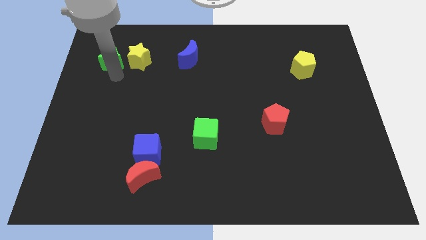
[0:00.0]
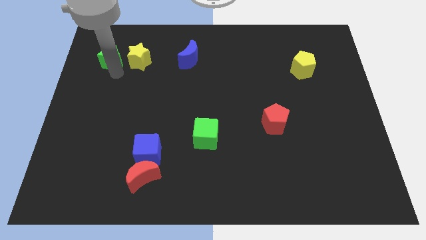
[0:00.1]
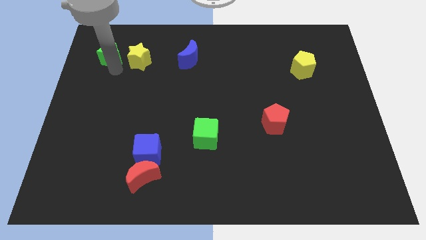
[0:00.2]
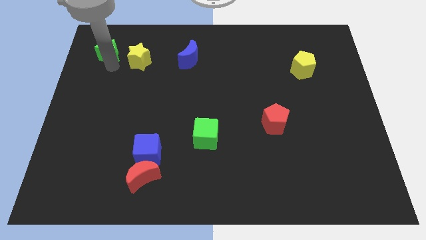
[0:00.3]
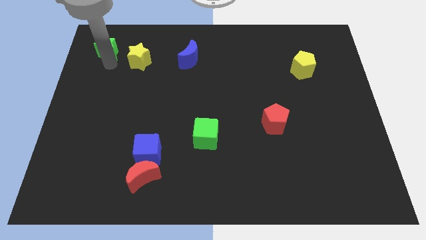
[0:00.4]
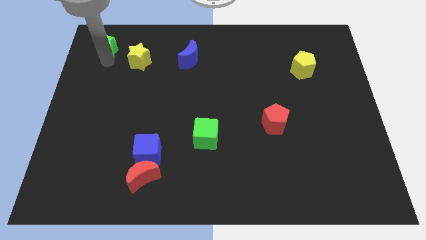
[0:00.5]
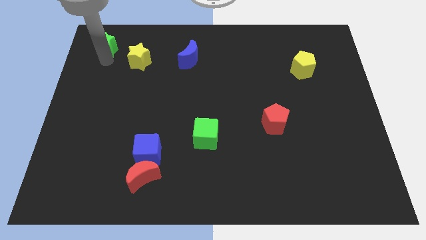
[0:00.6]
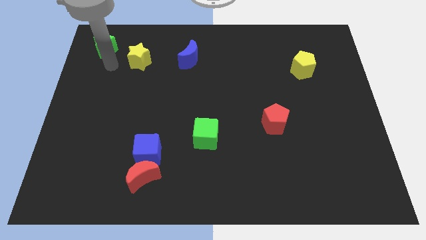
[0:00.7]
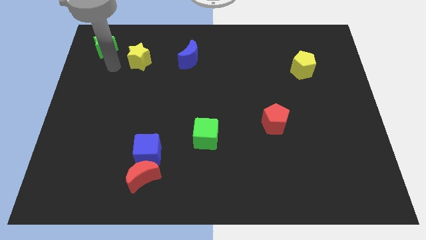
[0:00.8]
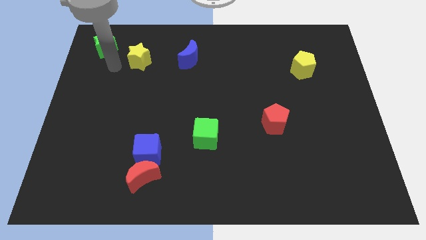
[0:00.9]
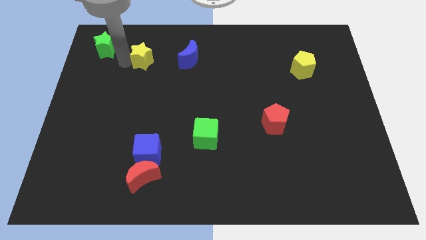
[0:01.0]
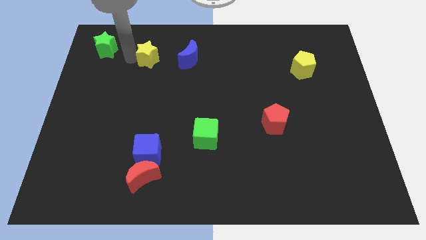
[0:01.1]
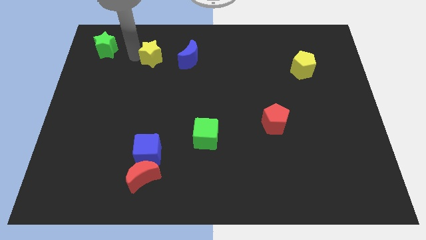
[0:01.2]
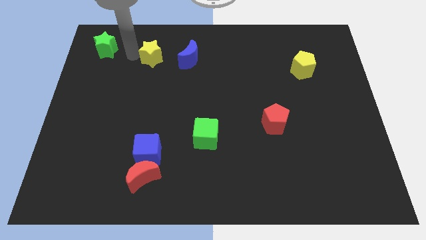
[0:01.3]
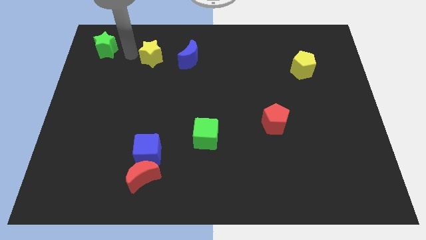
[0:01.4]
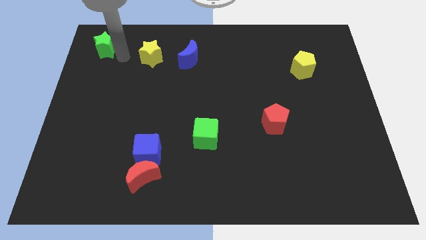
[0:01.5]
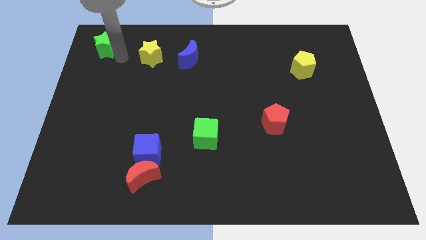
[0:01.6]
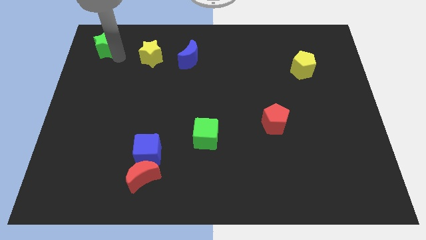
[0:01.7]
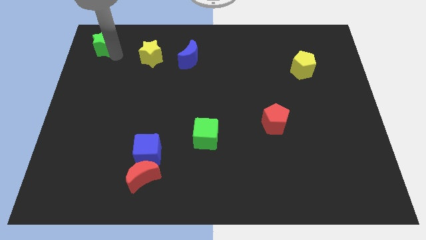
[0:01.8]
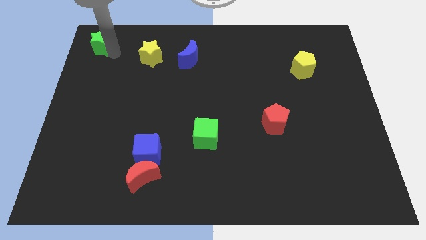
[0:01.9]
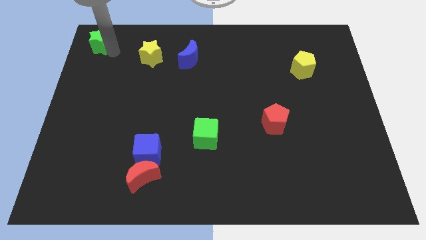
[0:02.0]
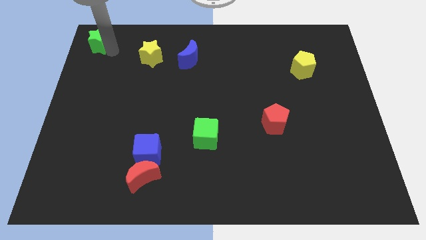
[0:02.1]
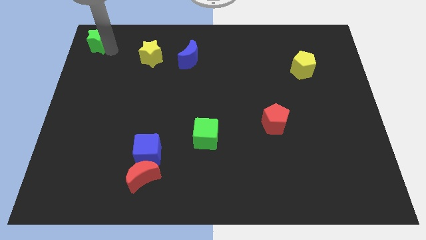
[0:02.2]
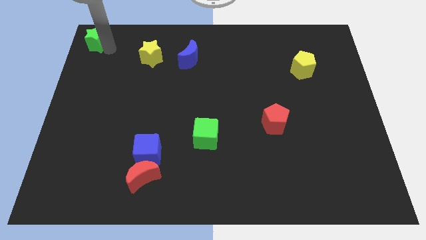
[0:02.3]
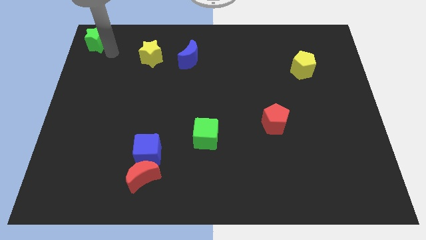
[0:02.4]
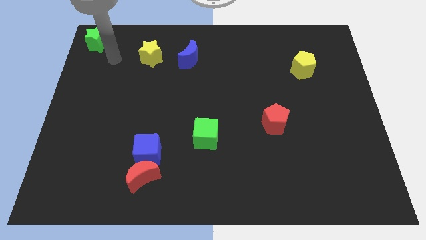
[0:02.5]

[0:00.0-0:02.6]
slide the green star to the top left corner

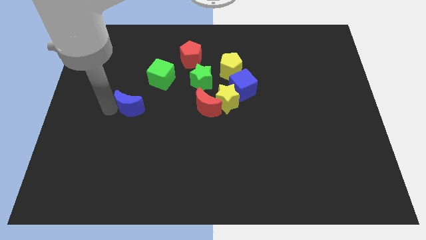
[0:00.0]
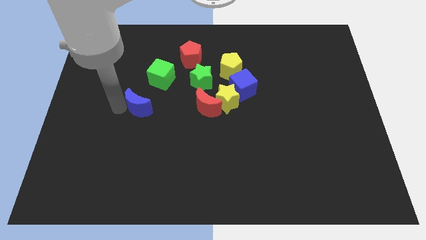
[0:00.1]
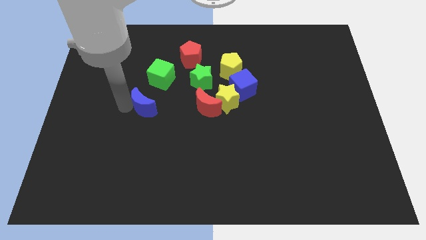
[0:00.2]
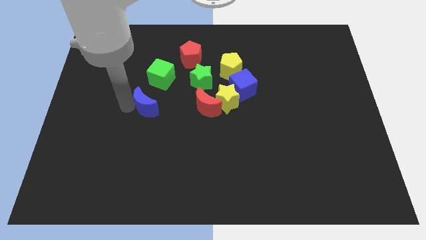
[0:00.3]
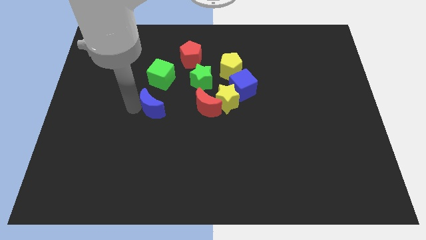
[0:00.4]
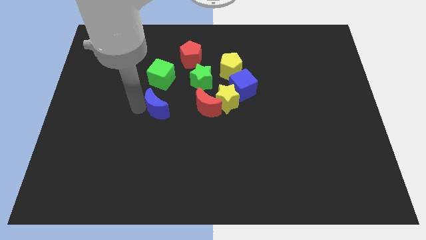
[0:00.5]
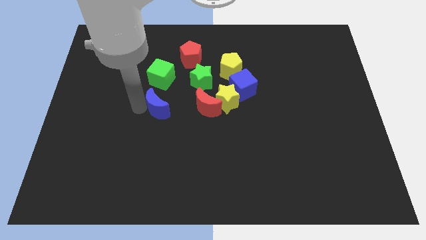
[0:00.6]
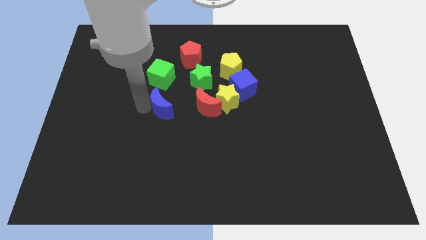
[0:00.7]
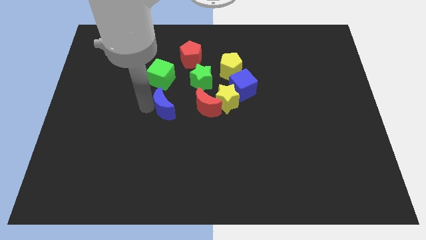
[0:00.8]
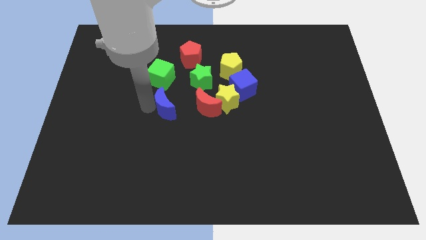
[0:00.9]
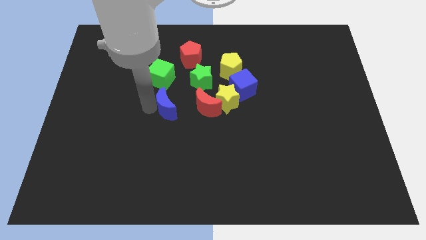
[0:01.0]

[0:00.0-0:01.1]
slide the blue moon below the green cube

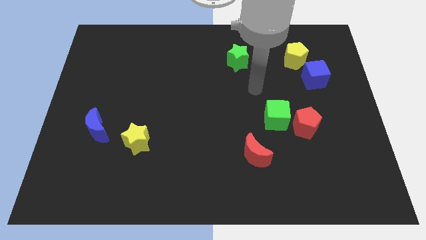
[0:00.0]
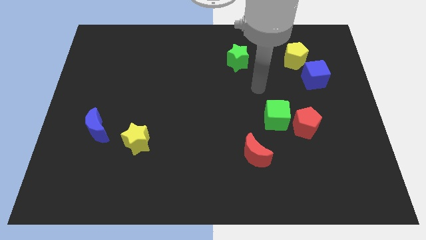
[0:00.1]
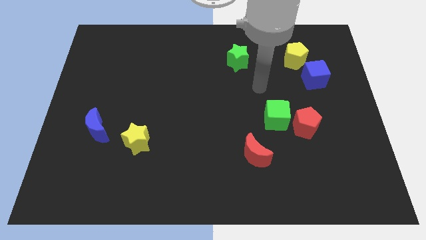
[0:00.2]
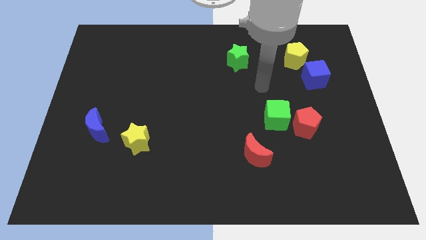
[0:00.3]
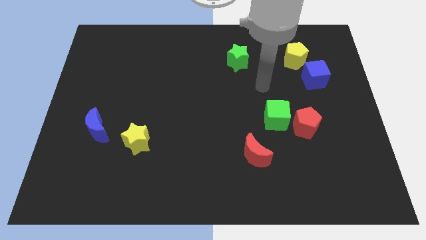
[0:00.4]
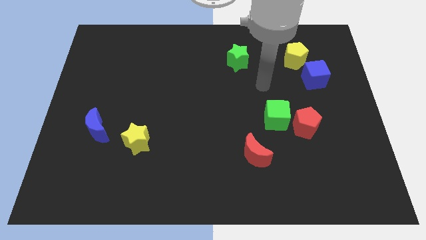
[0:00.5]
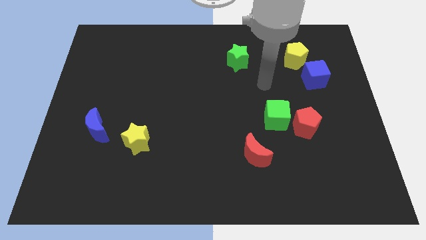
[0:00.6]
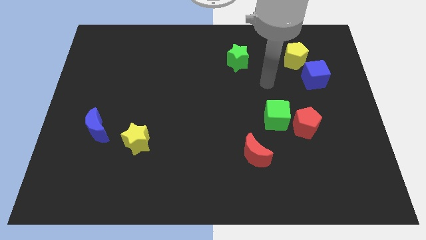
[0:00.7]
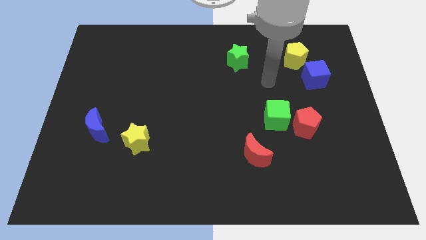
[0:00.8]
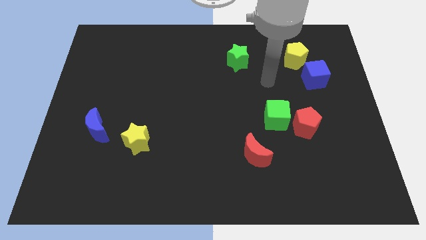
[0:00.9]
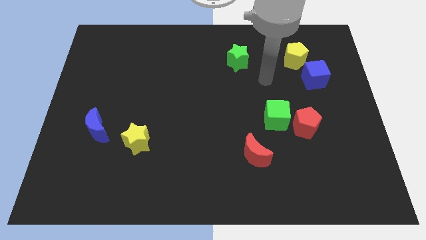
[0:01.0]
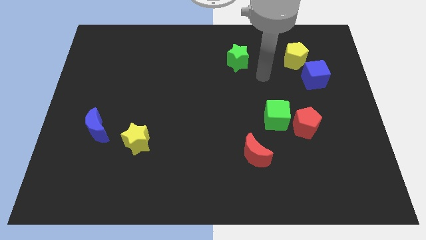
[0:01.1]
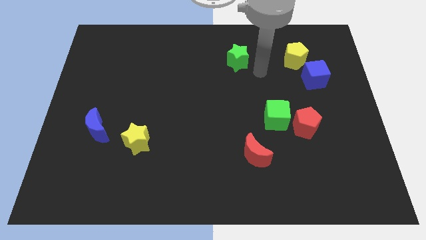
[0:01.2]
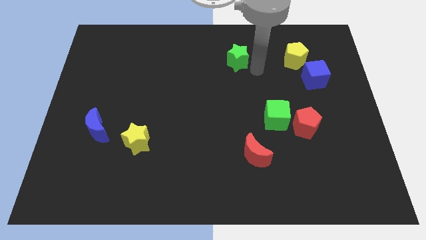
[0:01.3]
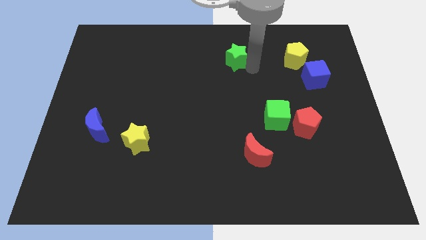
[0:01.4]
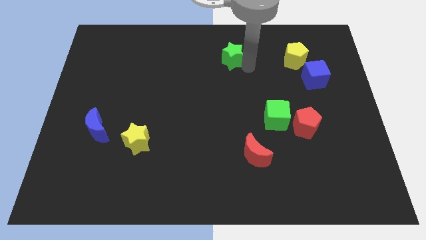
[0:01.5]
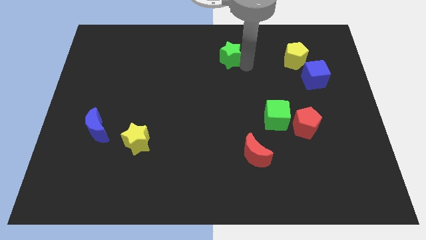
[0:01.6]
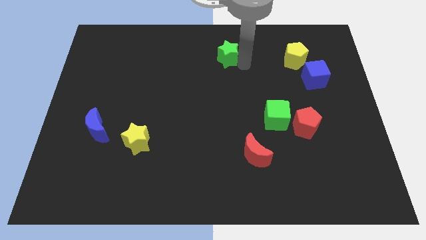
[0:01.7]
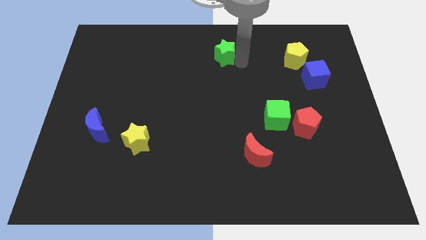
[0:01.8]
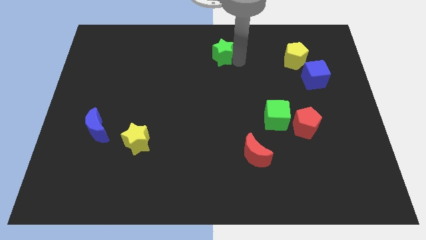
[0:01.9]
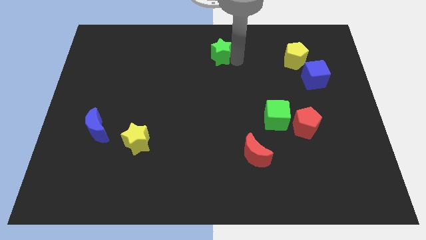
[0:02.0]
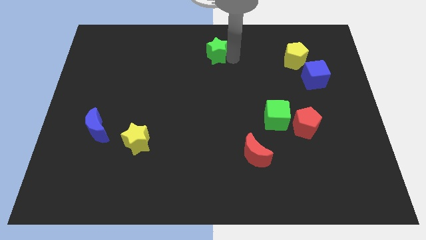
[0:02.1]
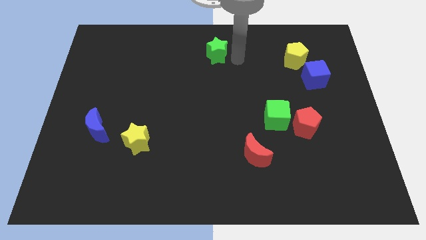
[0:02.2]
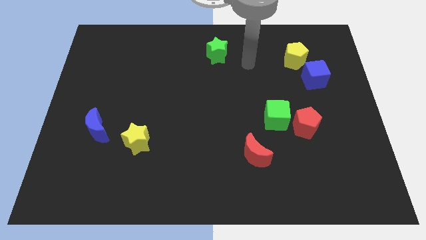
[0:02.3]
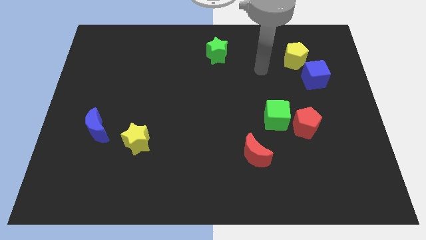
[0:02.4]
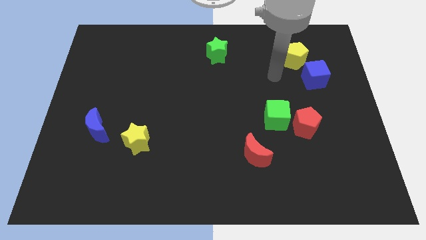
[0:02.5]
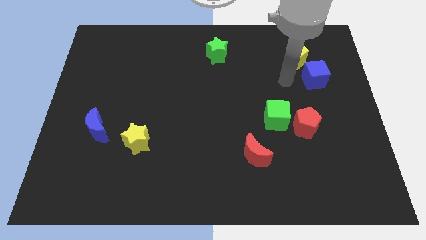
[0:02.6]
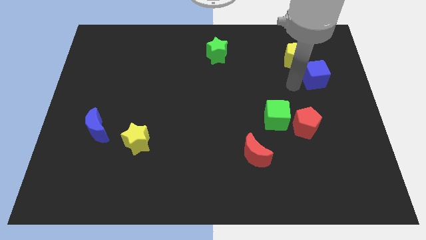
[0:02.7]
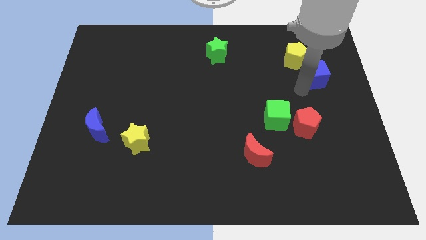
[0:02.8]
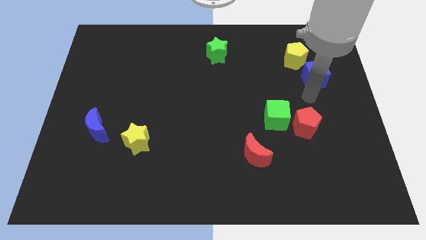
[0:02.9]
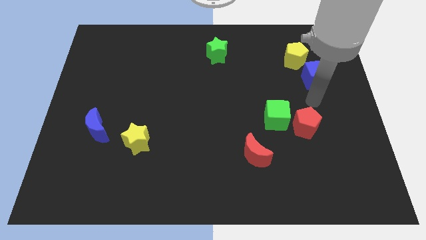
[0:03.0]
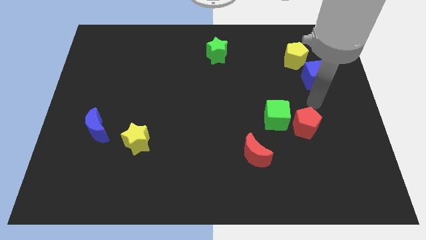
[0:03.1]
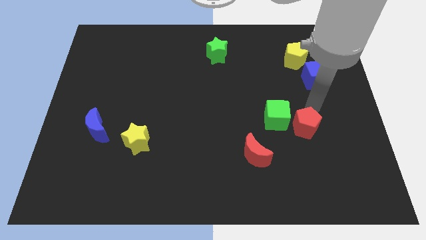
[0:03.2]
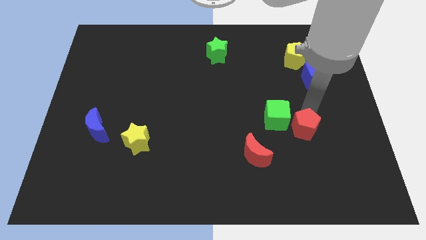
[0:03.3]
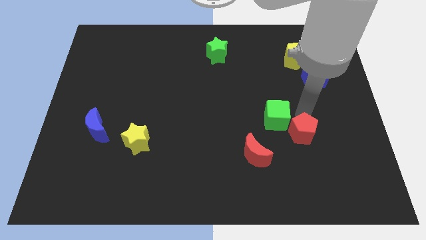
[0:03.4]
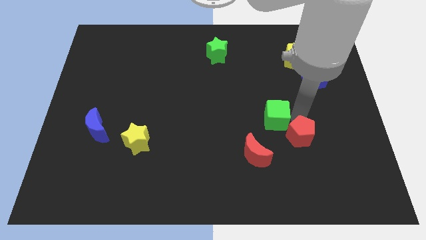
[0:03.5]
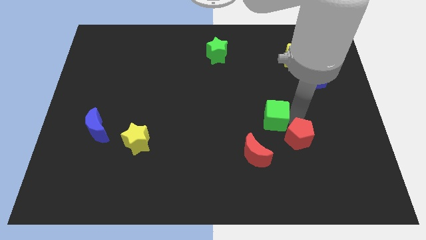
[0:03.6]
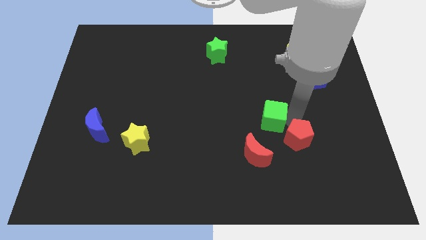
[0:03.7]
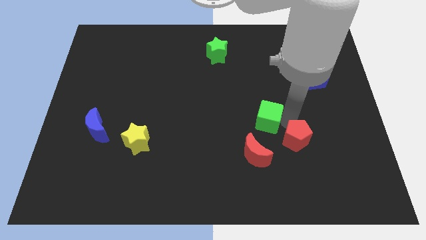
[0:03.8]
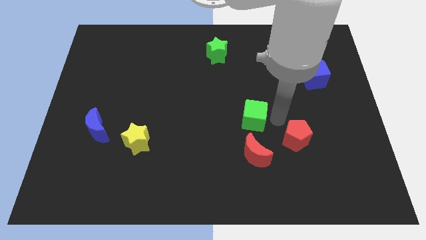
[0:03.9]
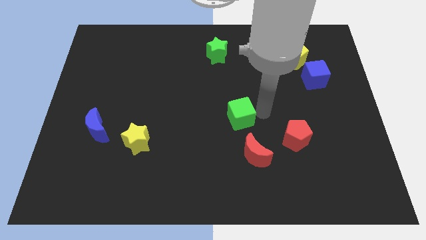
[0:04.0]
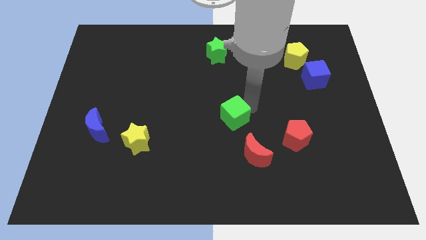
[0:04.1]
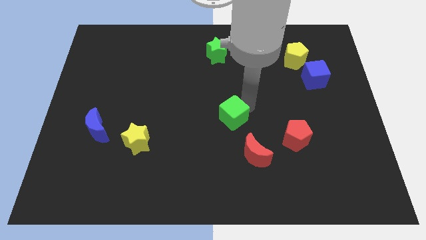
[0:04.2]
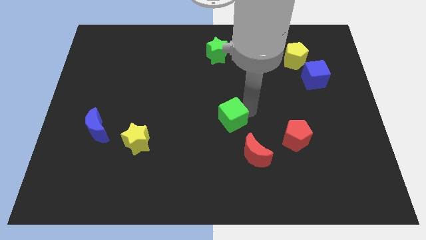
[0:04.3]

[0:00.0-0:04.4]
place the green cube to the right of the yellow star

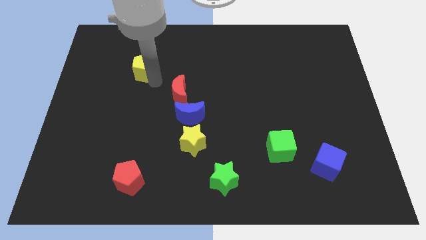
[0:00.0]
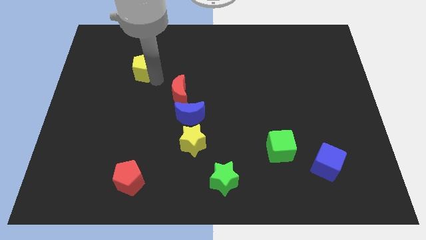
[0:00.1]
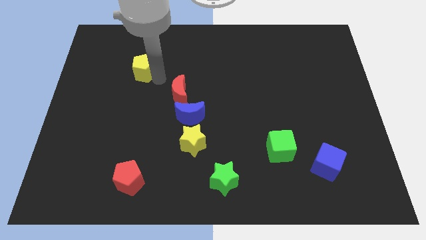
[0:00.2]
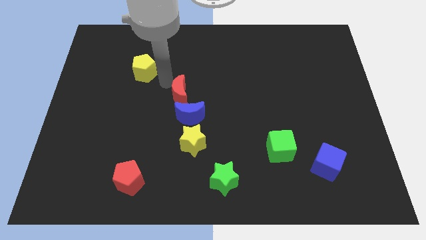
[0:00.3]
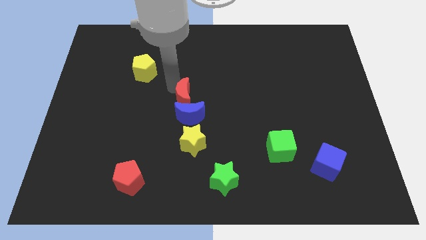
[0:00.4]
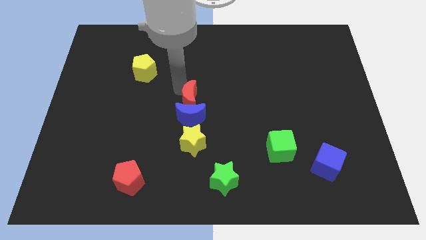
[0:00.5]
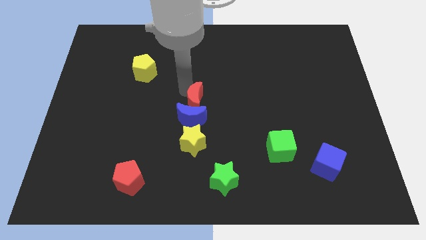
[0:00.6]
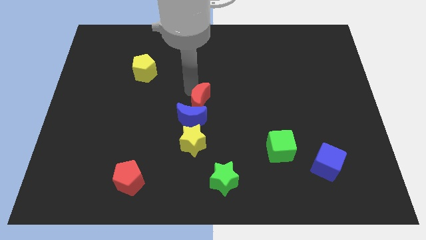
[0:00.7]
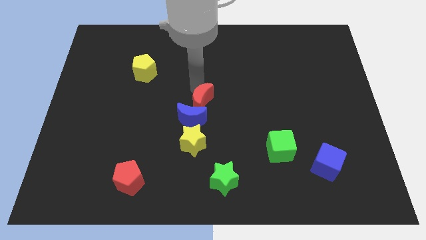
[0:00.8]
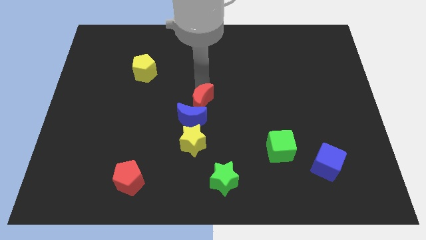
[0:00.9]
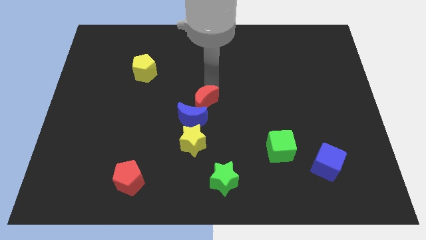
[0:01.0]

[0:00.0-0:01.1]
push the red moon to the center of the board
